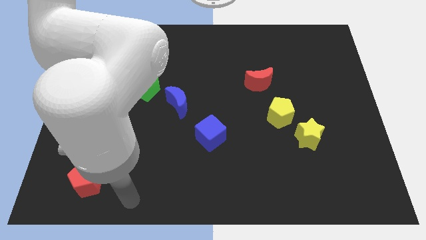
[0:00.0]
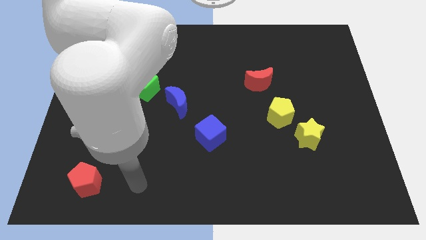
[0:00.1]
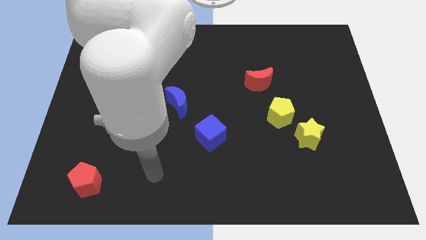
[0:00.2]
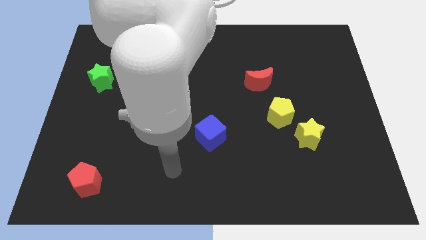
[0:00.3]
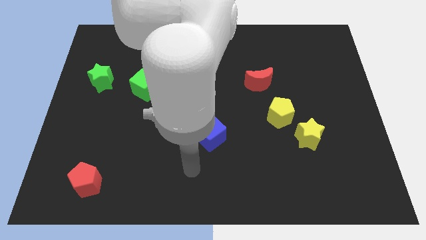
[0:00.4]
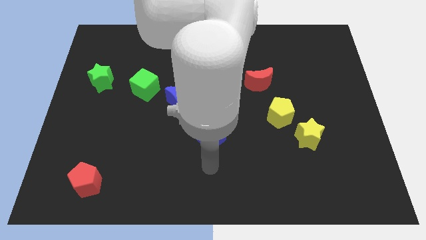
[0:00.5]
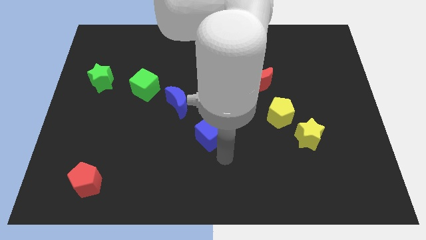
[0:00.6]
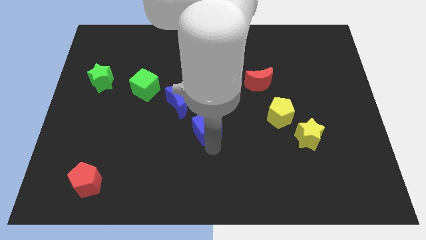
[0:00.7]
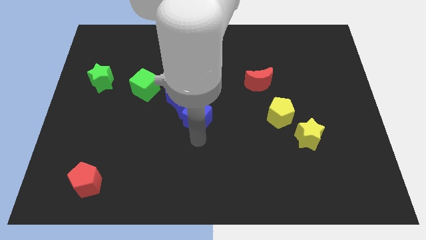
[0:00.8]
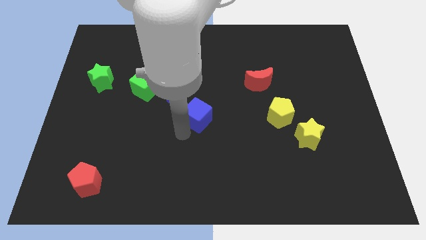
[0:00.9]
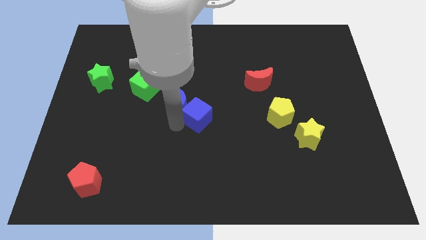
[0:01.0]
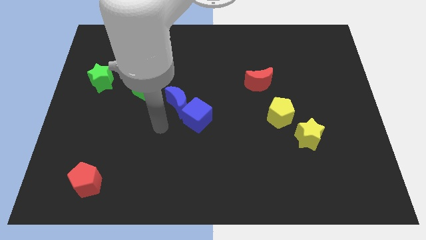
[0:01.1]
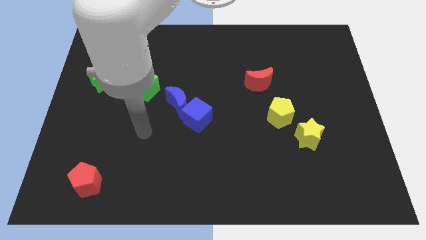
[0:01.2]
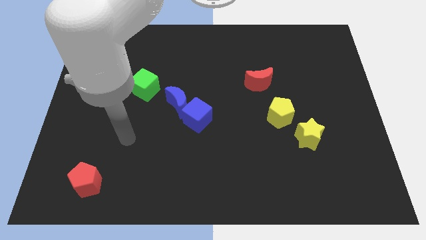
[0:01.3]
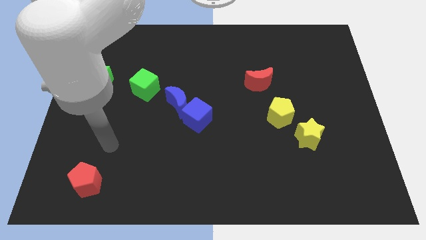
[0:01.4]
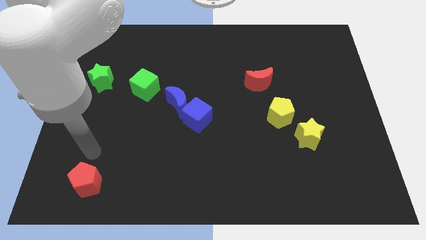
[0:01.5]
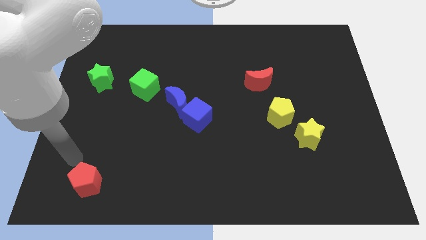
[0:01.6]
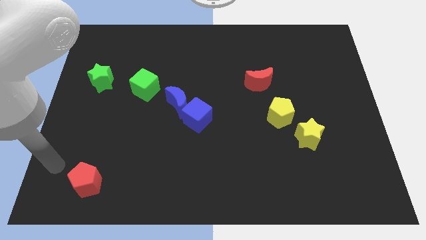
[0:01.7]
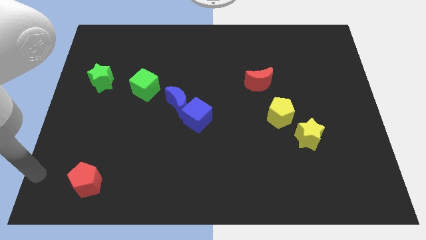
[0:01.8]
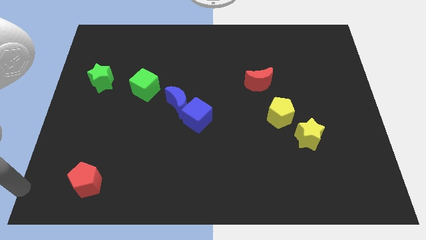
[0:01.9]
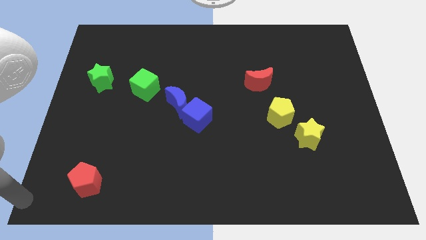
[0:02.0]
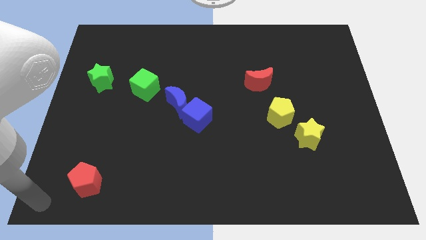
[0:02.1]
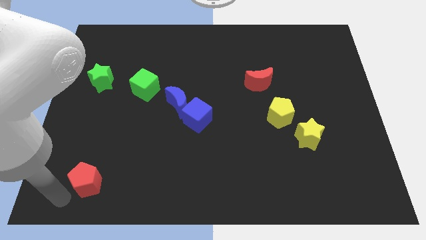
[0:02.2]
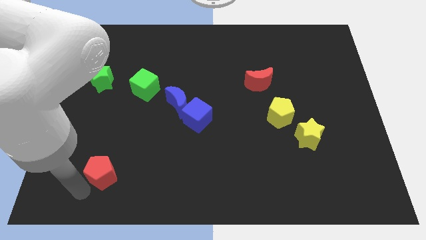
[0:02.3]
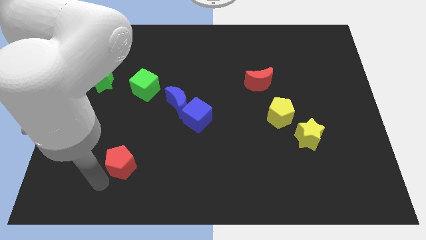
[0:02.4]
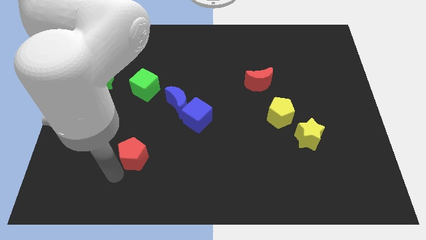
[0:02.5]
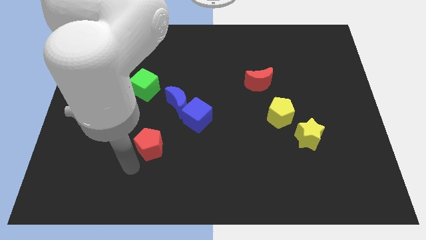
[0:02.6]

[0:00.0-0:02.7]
push red pentagon below green cube

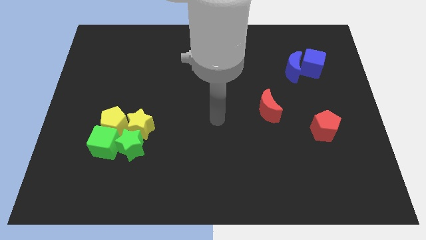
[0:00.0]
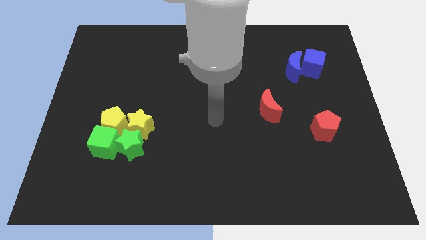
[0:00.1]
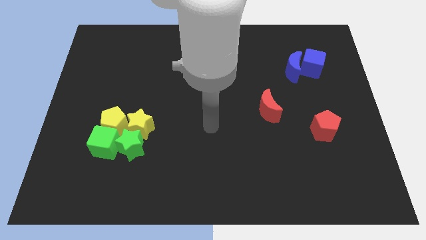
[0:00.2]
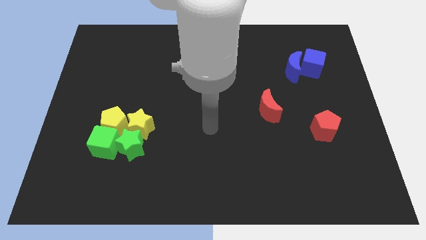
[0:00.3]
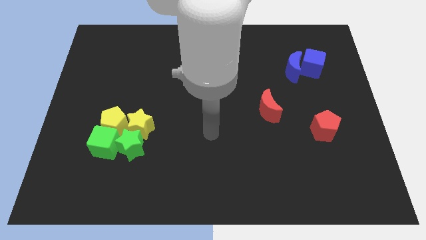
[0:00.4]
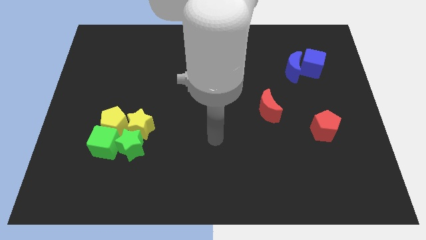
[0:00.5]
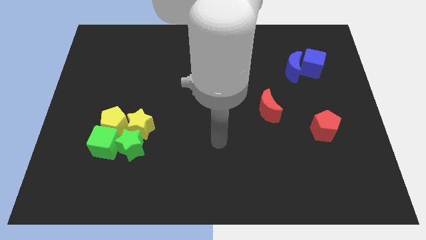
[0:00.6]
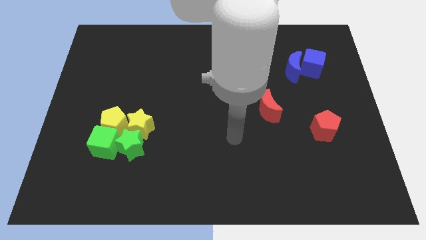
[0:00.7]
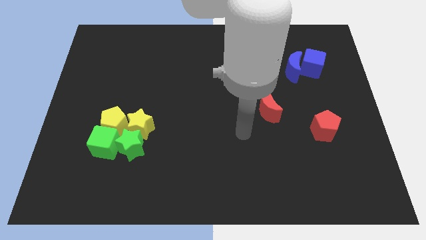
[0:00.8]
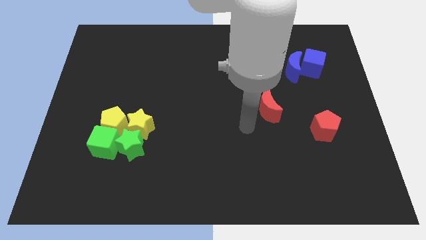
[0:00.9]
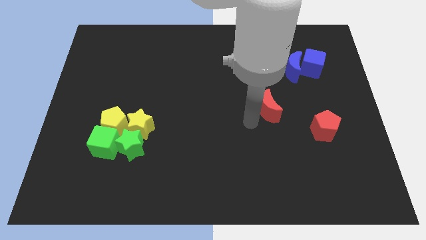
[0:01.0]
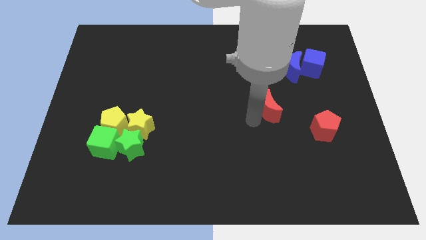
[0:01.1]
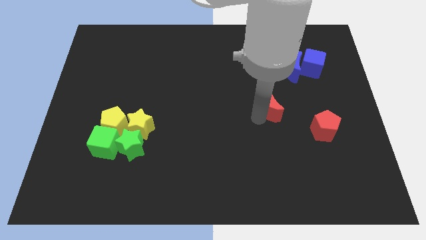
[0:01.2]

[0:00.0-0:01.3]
place the arm diagonal to the left side of the red moon

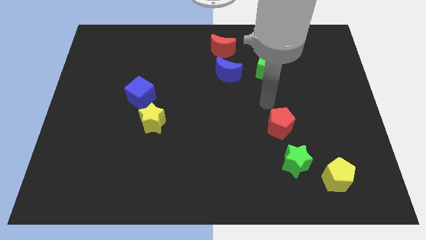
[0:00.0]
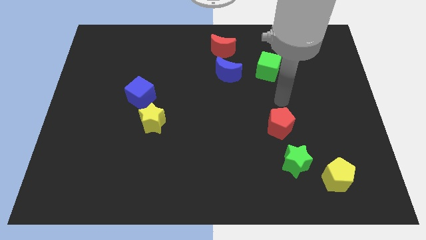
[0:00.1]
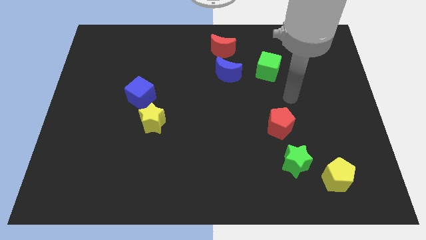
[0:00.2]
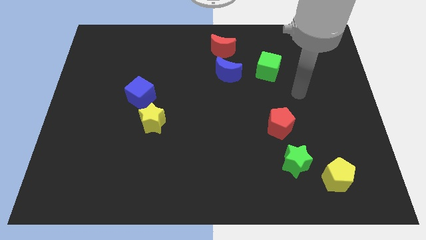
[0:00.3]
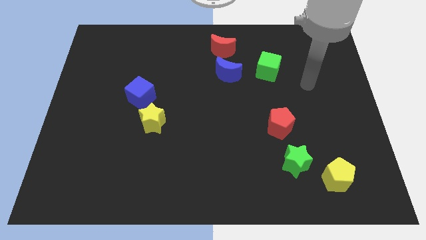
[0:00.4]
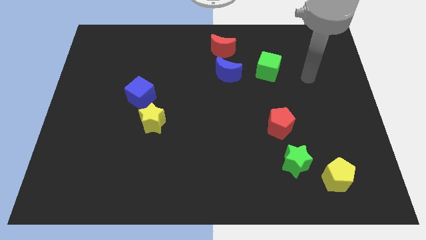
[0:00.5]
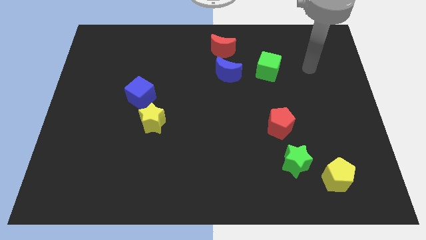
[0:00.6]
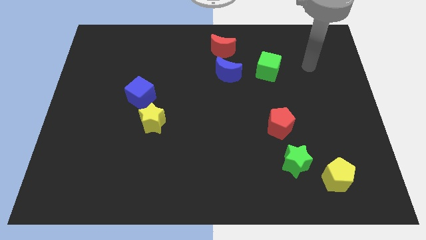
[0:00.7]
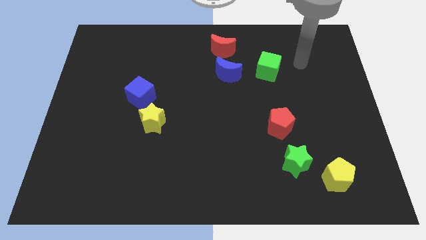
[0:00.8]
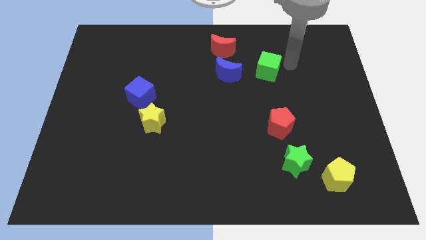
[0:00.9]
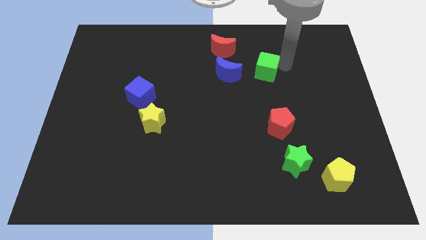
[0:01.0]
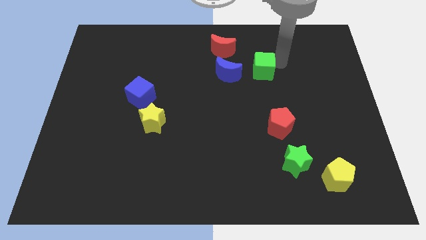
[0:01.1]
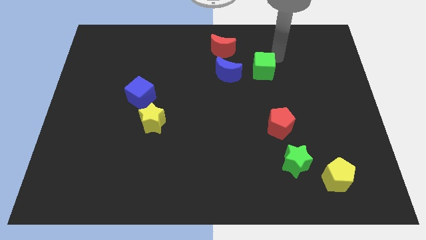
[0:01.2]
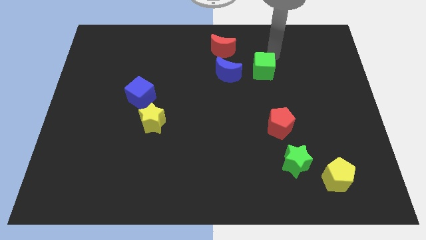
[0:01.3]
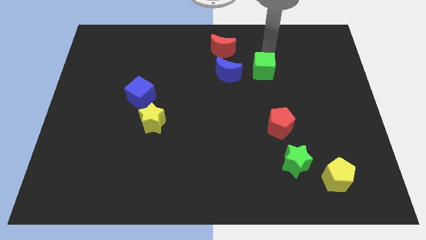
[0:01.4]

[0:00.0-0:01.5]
move your hand at the top right side of the green cube

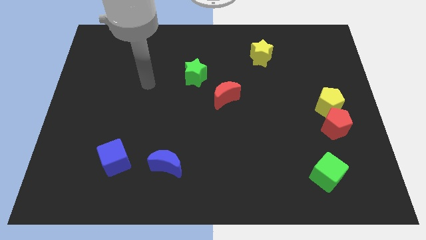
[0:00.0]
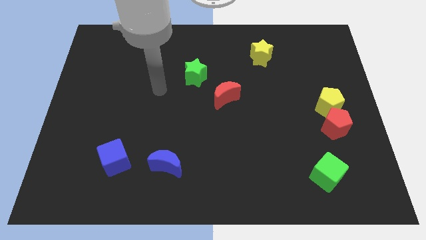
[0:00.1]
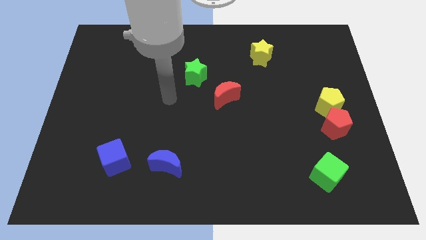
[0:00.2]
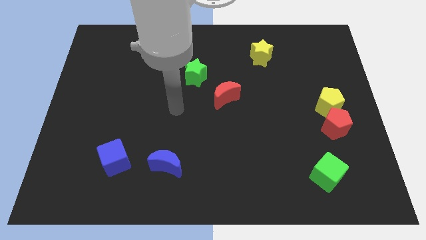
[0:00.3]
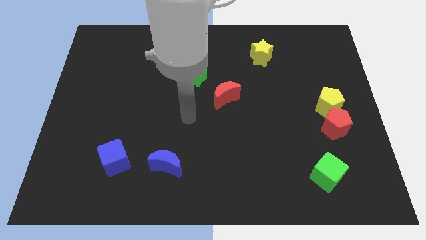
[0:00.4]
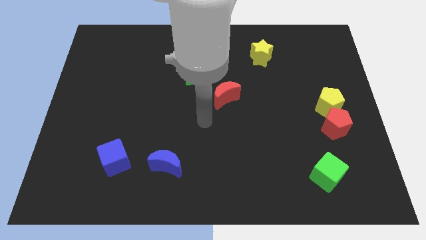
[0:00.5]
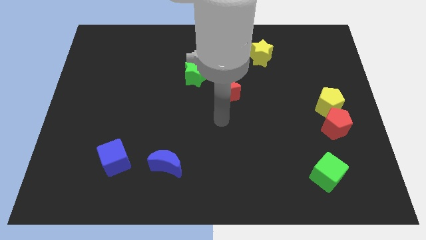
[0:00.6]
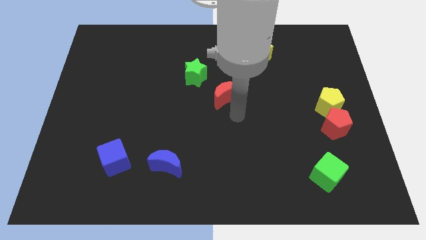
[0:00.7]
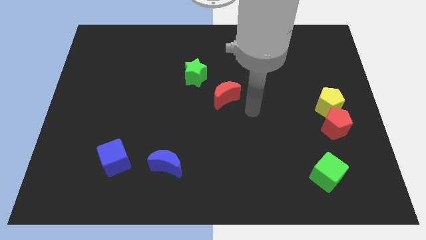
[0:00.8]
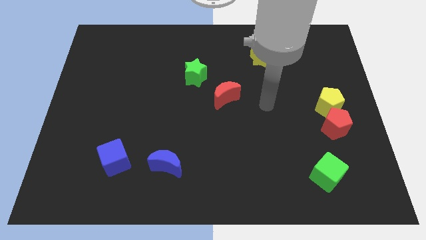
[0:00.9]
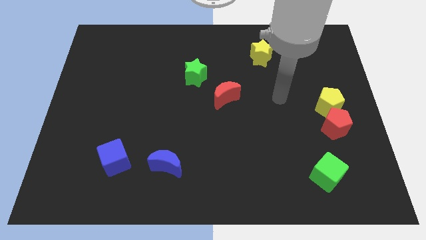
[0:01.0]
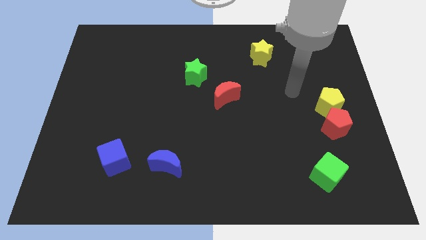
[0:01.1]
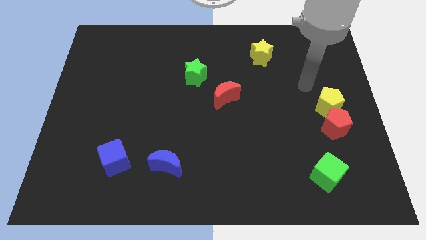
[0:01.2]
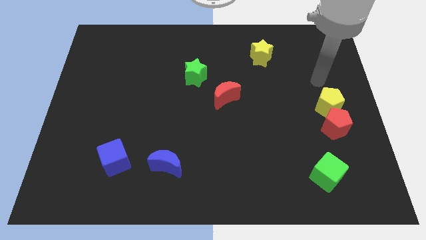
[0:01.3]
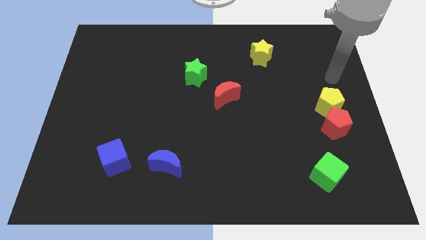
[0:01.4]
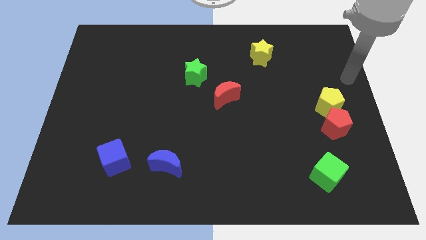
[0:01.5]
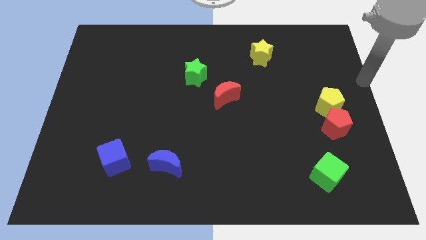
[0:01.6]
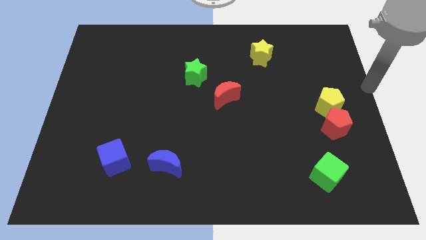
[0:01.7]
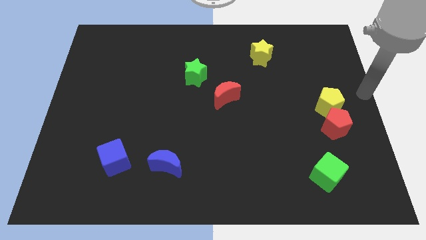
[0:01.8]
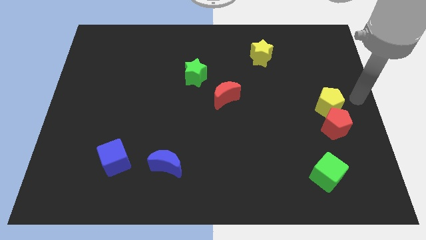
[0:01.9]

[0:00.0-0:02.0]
move your arm around the yellow pentagon

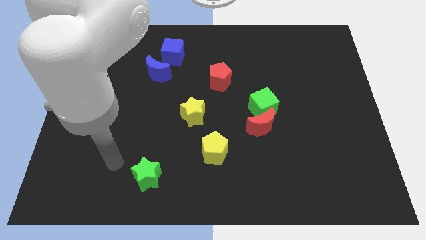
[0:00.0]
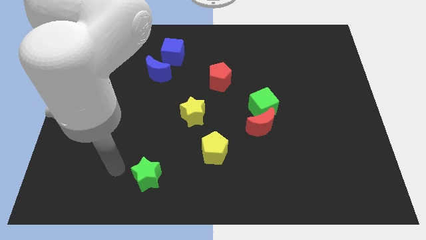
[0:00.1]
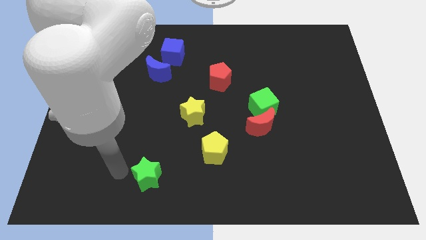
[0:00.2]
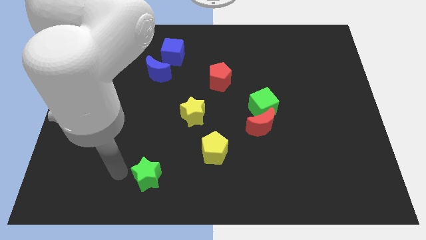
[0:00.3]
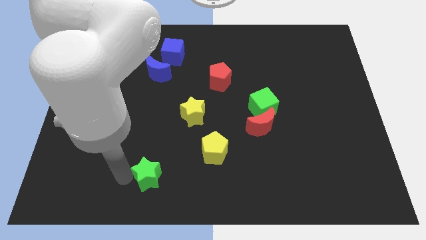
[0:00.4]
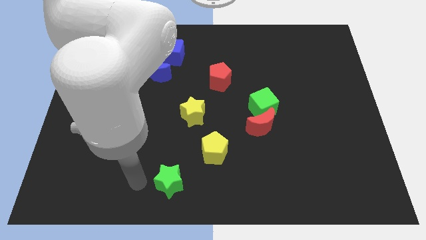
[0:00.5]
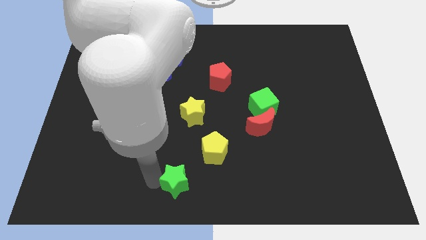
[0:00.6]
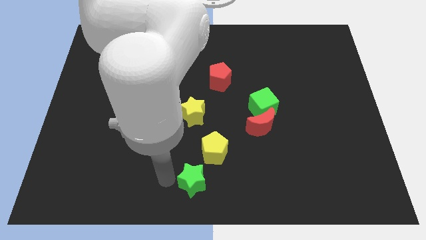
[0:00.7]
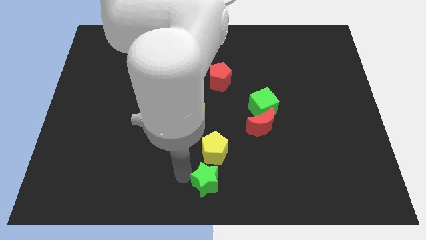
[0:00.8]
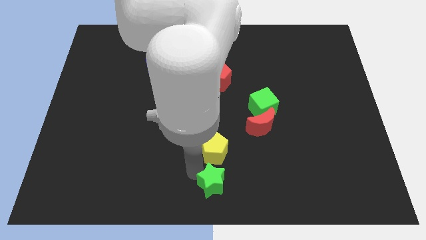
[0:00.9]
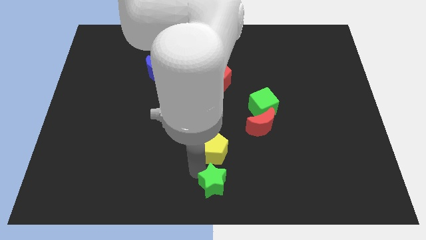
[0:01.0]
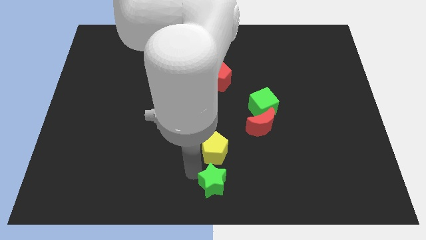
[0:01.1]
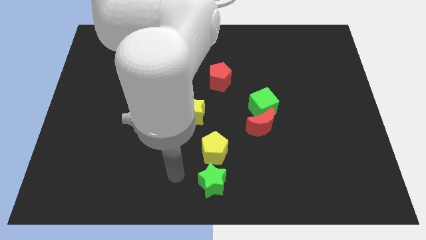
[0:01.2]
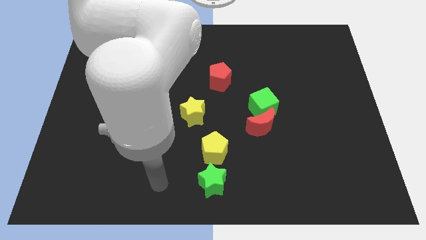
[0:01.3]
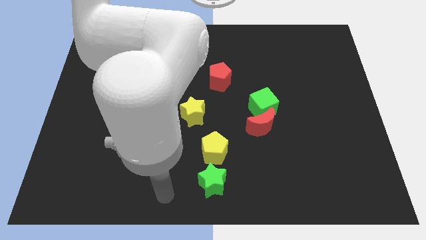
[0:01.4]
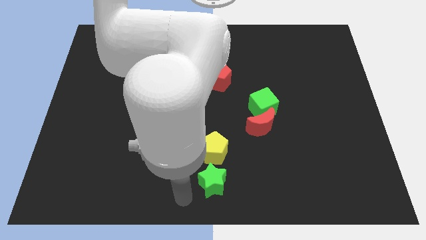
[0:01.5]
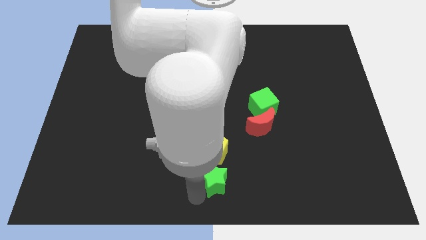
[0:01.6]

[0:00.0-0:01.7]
push the green star to the bottom side of the yellow pentagon
